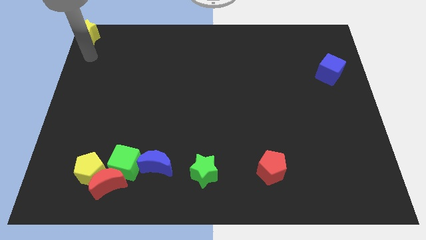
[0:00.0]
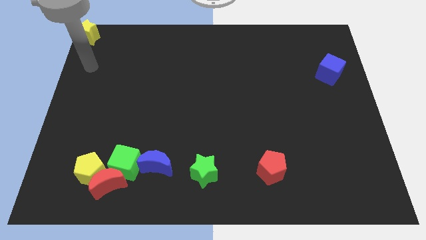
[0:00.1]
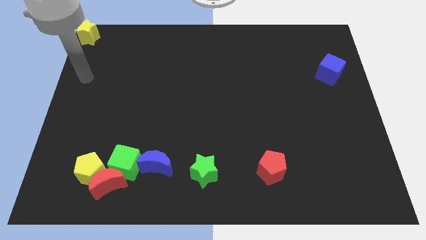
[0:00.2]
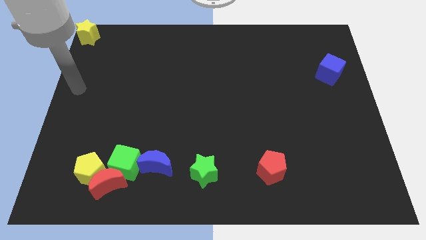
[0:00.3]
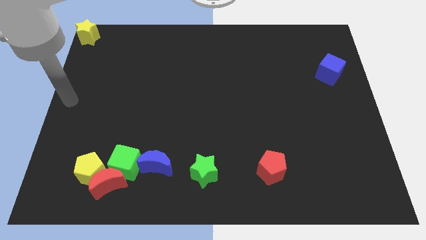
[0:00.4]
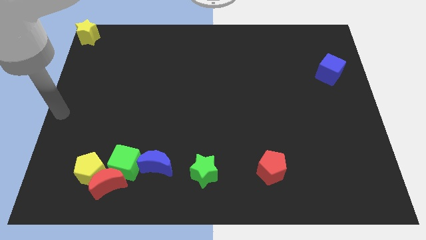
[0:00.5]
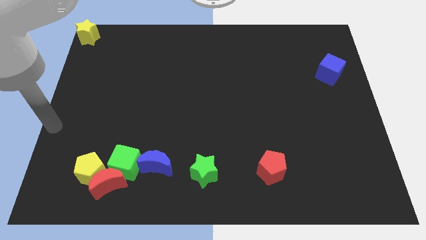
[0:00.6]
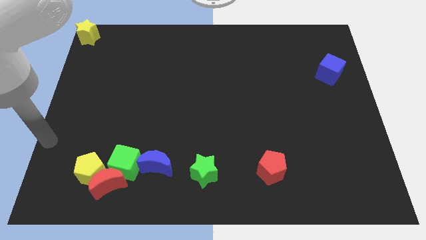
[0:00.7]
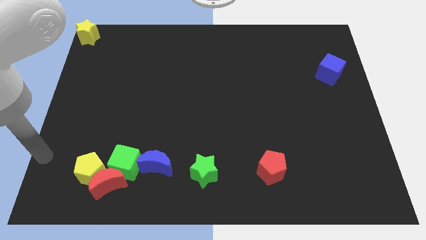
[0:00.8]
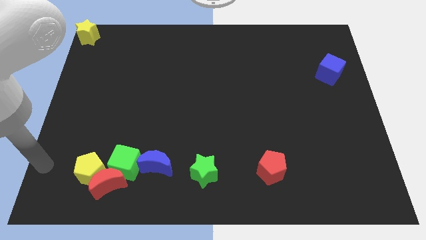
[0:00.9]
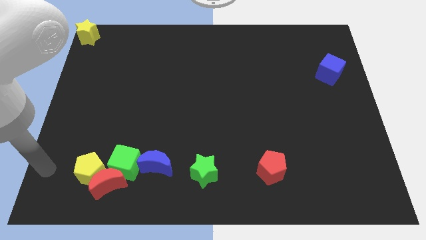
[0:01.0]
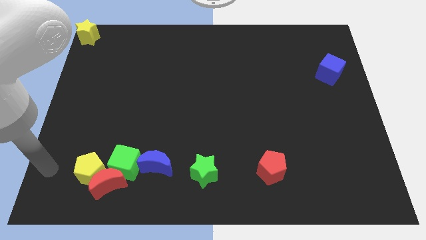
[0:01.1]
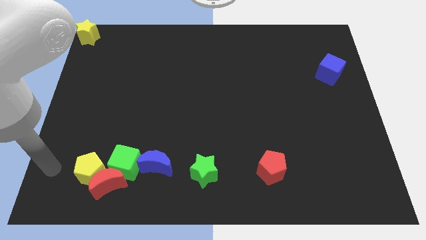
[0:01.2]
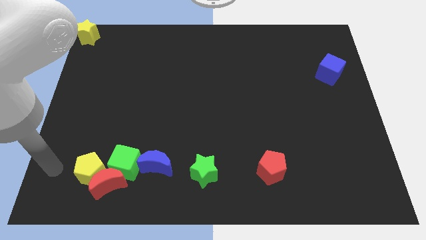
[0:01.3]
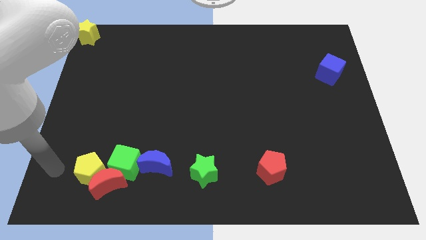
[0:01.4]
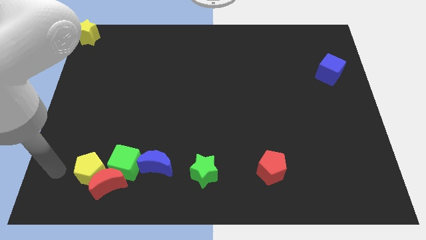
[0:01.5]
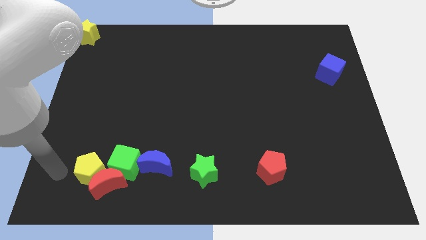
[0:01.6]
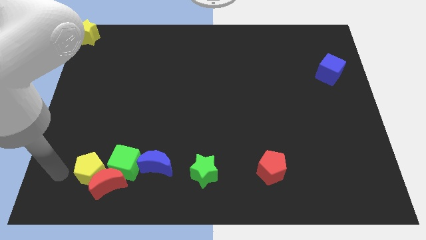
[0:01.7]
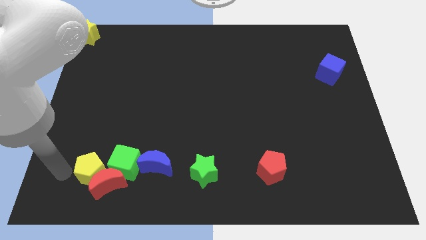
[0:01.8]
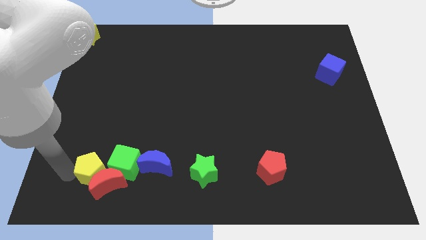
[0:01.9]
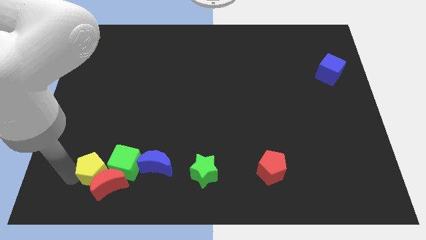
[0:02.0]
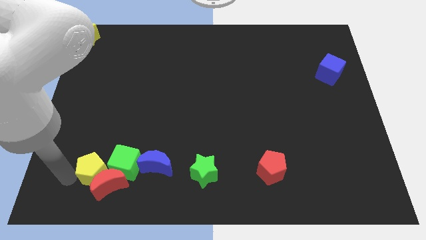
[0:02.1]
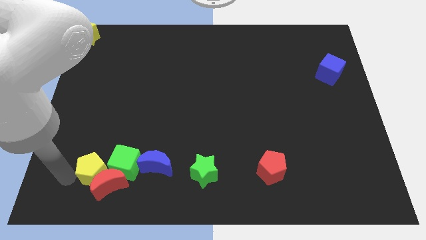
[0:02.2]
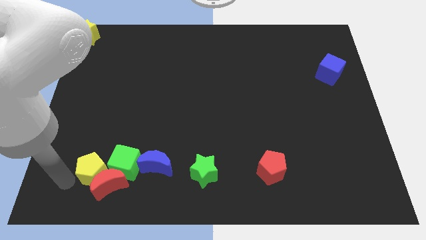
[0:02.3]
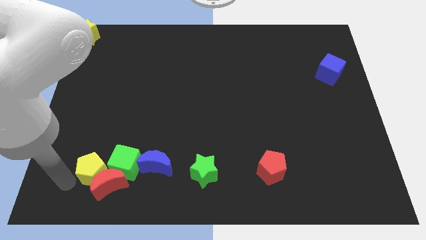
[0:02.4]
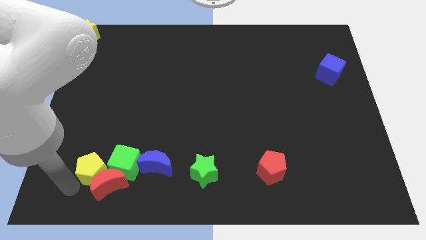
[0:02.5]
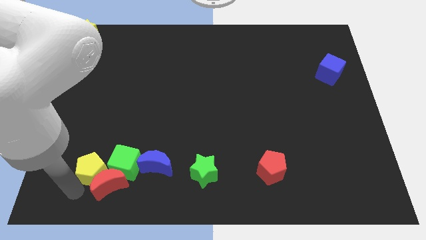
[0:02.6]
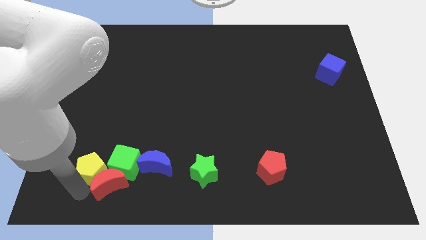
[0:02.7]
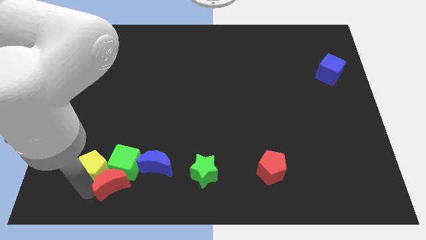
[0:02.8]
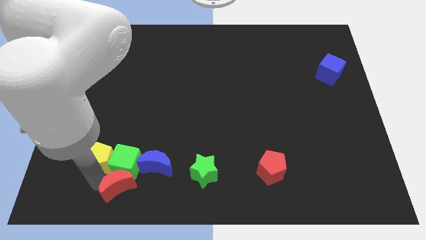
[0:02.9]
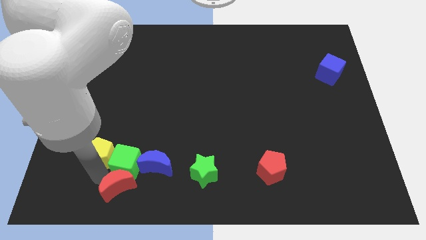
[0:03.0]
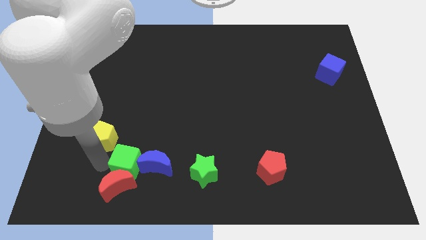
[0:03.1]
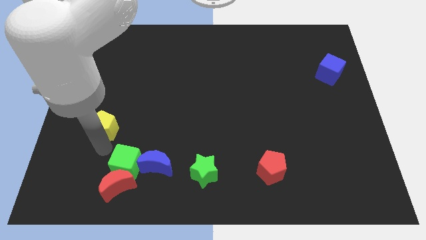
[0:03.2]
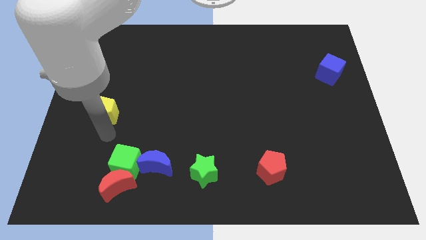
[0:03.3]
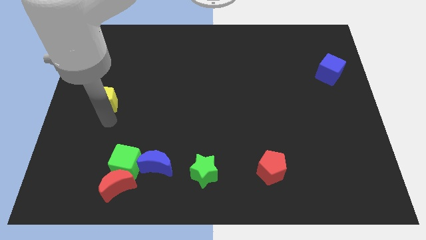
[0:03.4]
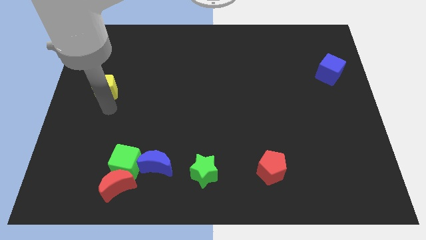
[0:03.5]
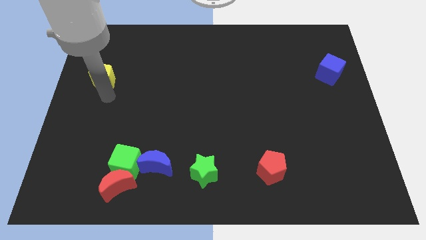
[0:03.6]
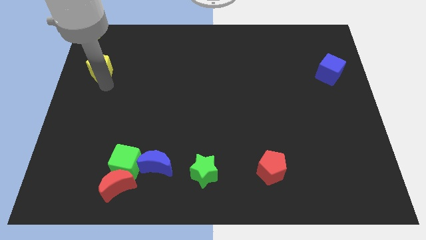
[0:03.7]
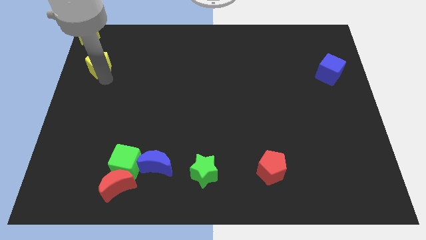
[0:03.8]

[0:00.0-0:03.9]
separate the yellow pentagon from the group of blocks

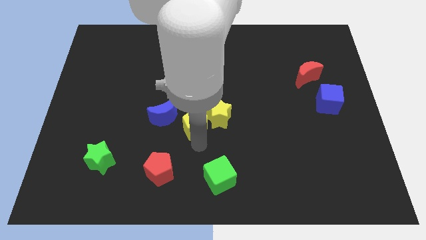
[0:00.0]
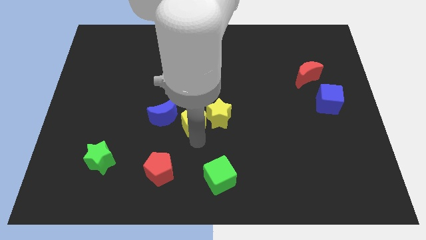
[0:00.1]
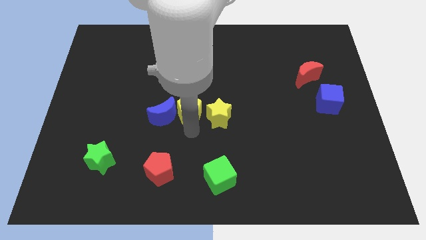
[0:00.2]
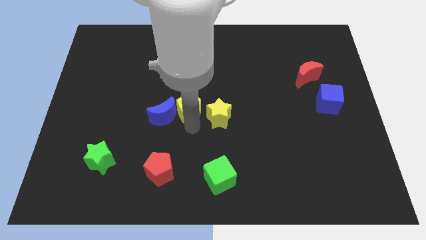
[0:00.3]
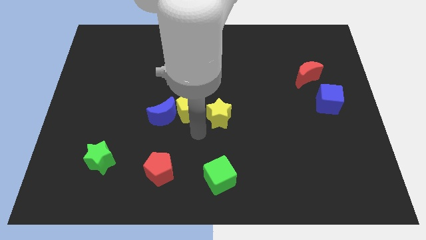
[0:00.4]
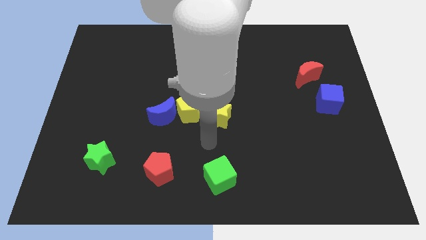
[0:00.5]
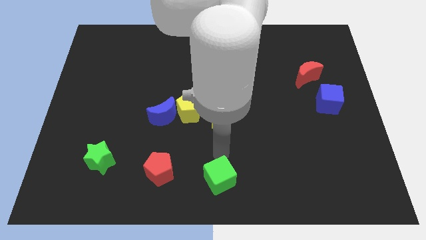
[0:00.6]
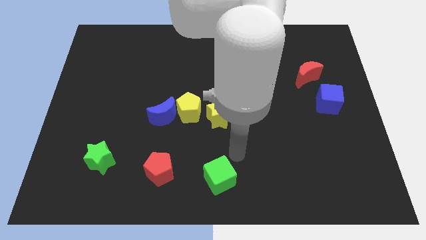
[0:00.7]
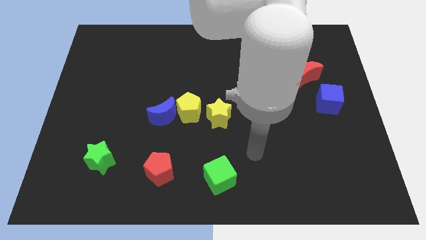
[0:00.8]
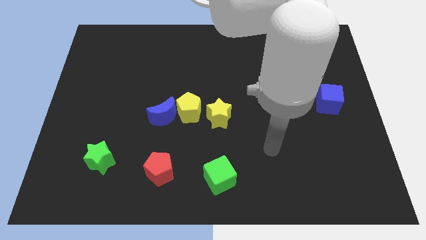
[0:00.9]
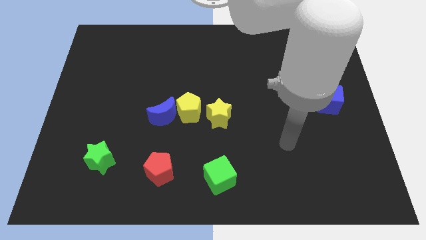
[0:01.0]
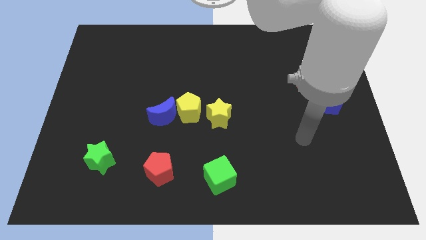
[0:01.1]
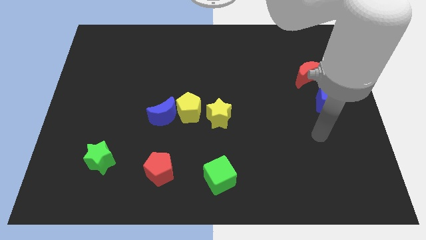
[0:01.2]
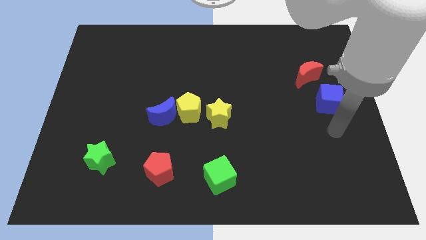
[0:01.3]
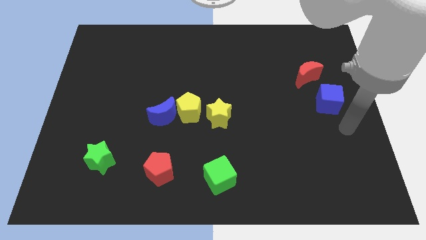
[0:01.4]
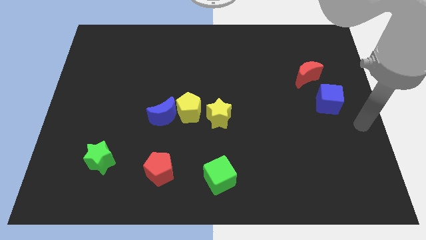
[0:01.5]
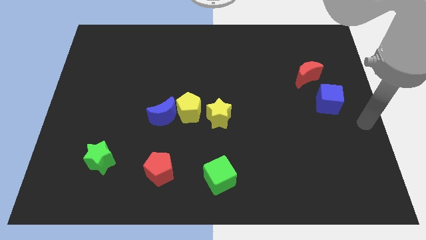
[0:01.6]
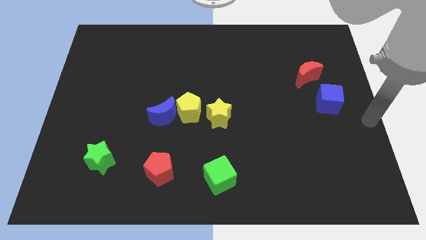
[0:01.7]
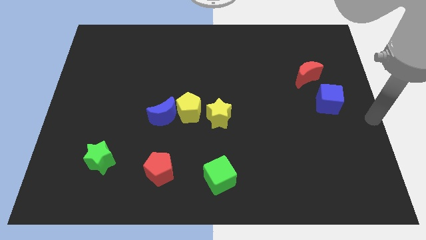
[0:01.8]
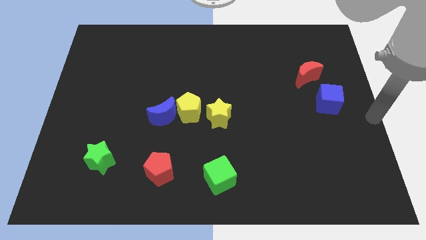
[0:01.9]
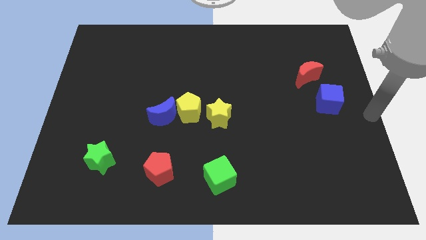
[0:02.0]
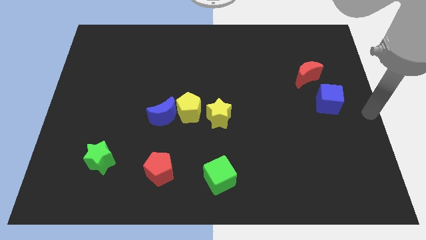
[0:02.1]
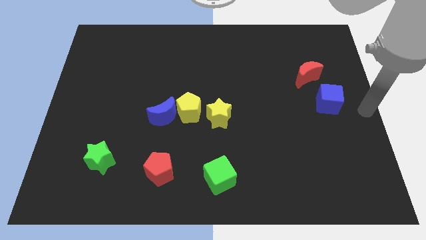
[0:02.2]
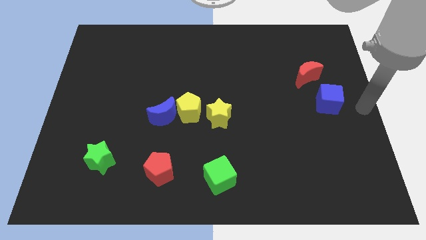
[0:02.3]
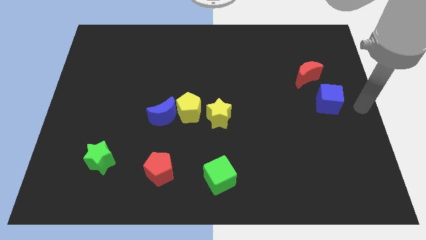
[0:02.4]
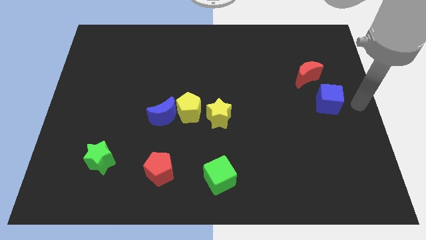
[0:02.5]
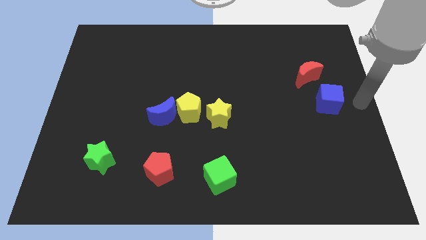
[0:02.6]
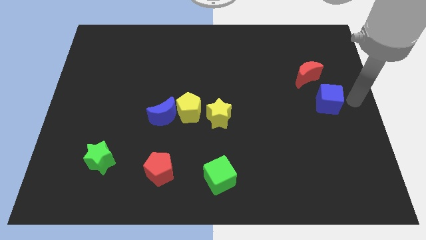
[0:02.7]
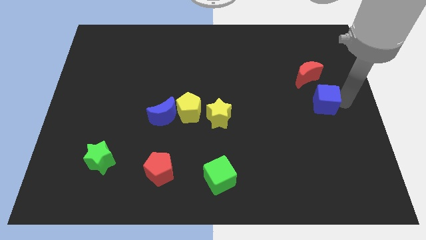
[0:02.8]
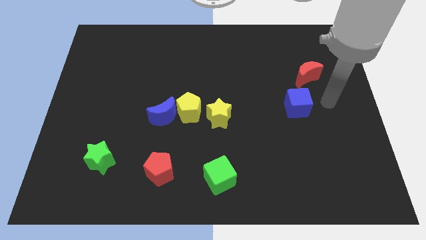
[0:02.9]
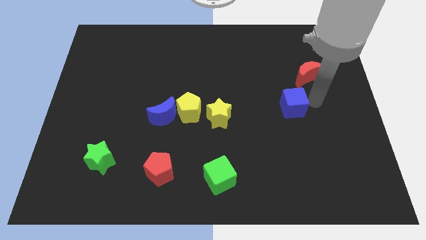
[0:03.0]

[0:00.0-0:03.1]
place the blue cube diagonally bottom left to the red moon

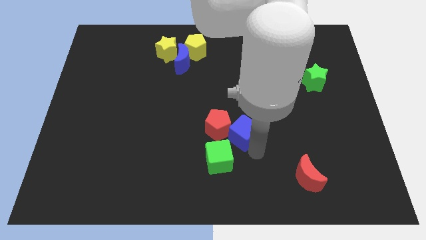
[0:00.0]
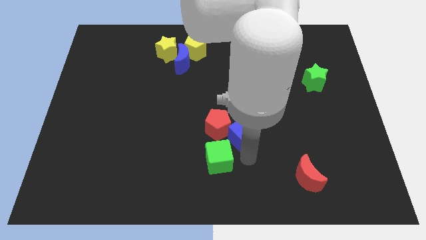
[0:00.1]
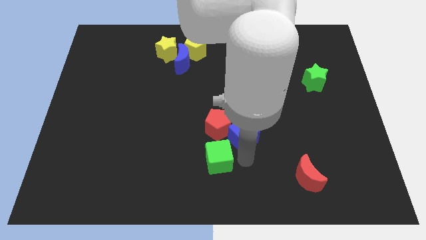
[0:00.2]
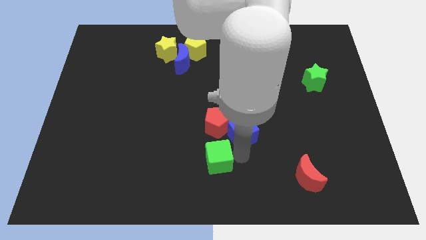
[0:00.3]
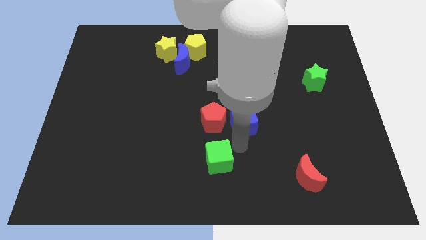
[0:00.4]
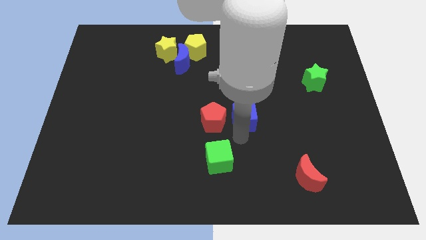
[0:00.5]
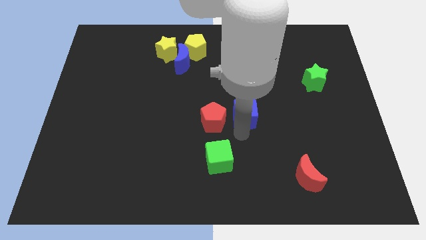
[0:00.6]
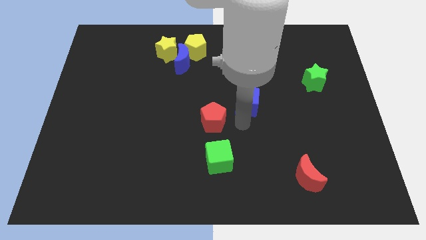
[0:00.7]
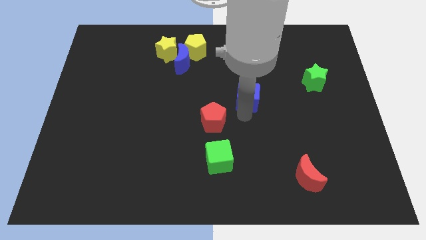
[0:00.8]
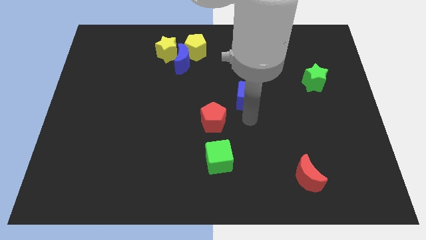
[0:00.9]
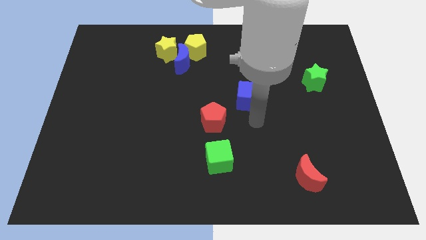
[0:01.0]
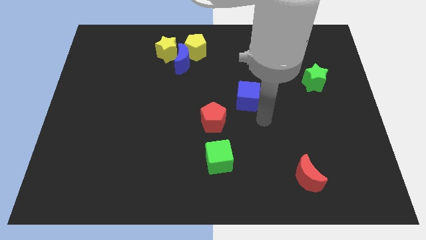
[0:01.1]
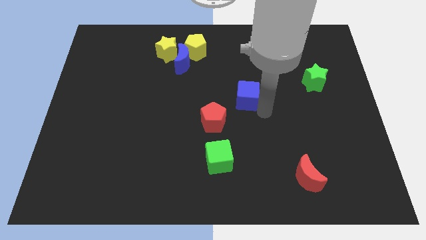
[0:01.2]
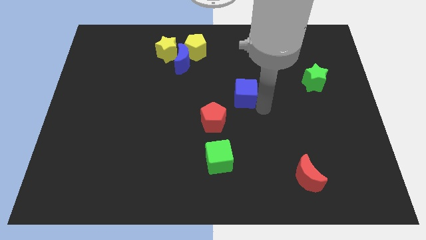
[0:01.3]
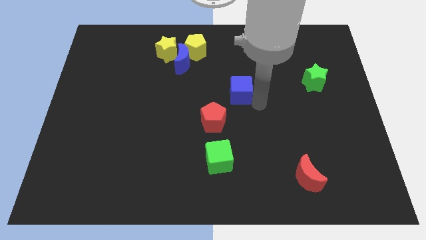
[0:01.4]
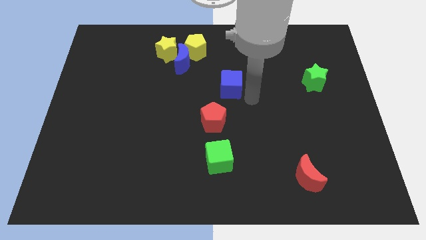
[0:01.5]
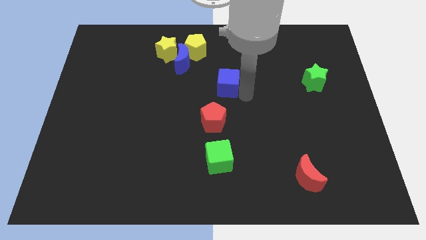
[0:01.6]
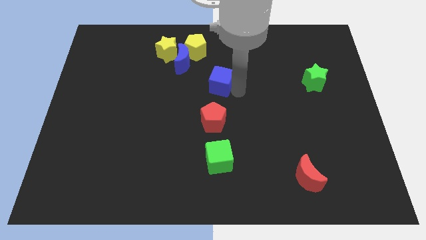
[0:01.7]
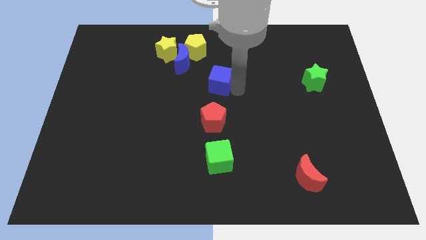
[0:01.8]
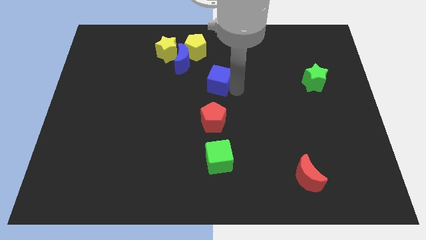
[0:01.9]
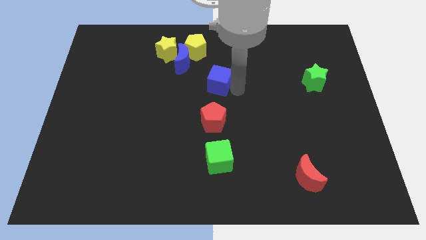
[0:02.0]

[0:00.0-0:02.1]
separate blue cube from red pentagon

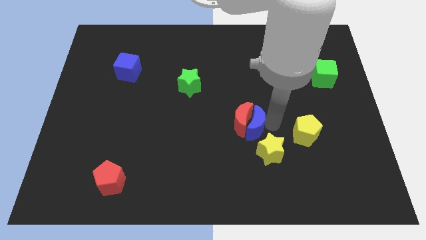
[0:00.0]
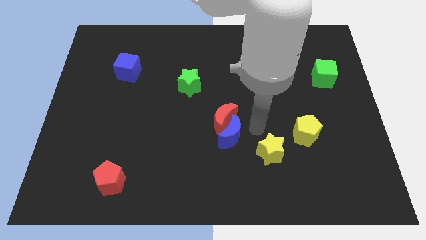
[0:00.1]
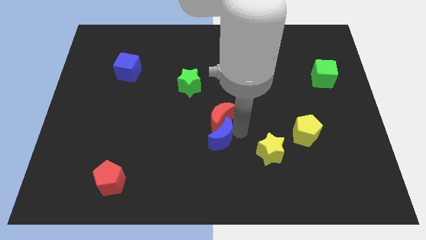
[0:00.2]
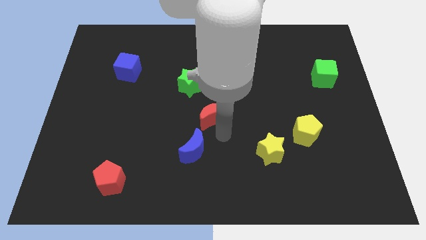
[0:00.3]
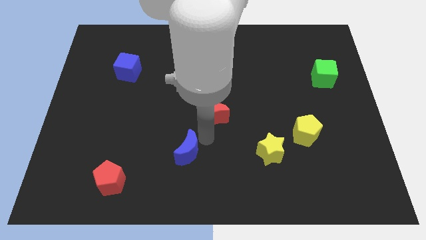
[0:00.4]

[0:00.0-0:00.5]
separate the blue crescent away from the red crescent
